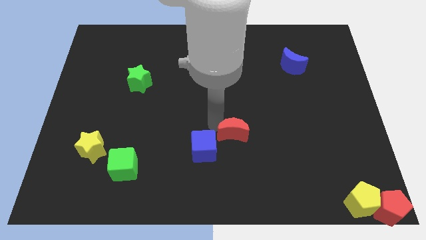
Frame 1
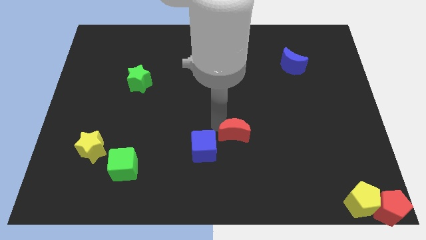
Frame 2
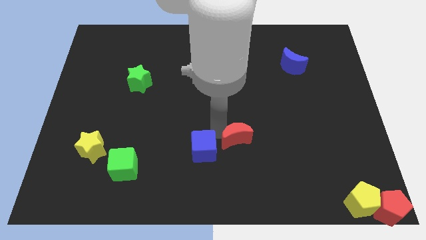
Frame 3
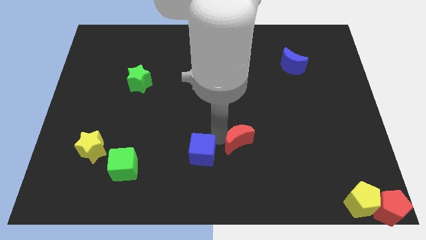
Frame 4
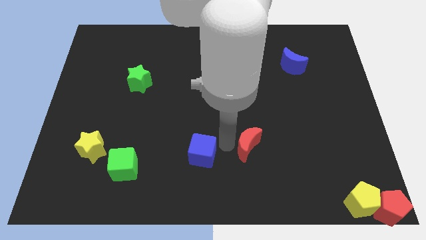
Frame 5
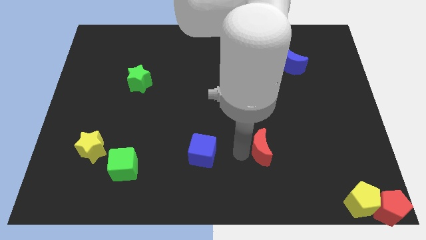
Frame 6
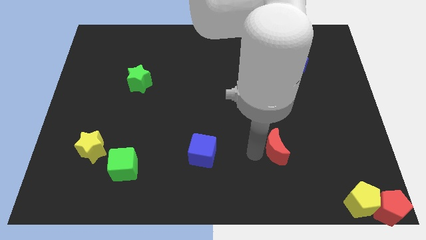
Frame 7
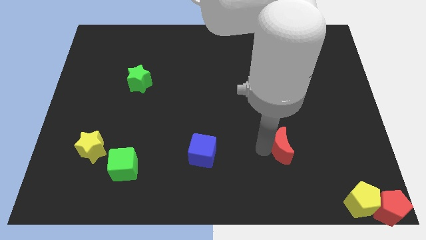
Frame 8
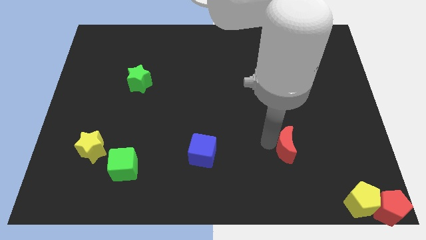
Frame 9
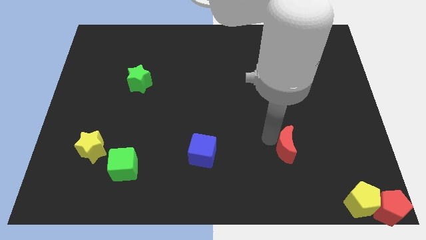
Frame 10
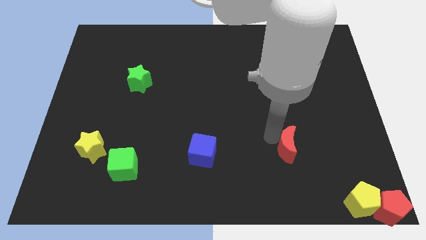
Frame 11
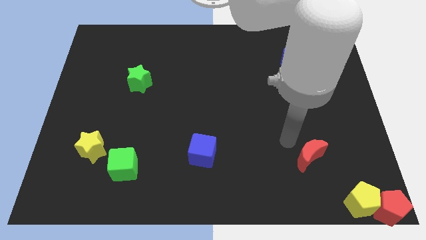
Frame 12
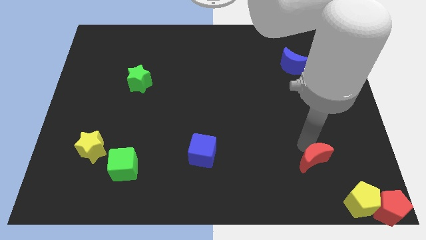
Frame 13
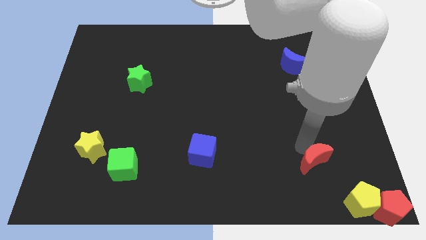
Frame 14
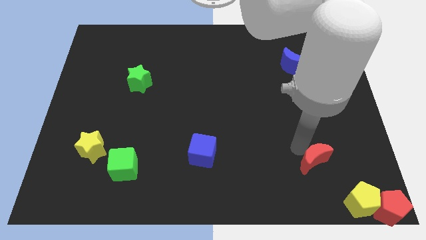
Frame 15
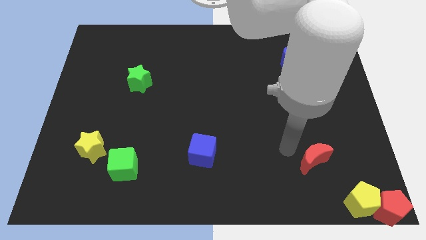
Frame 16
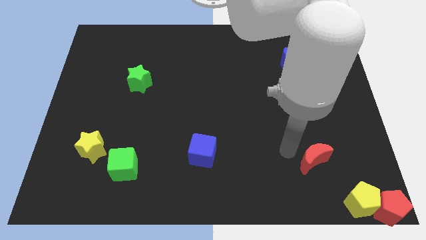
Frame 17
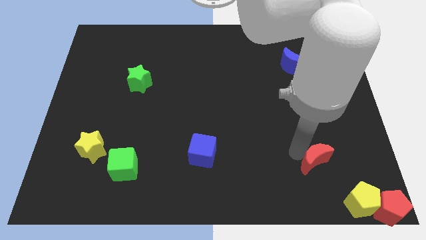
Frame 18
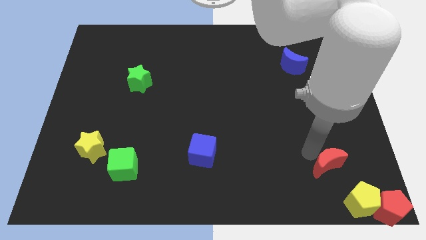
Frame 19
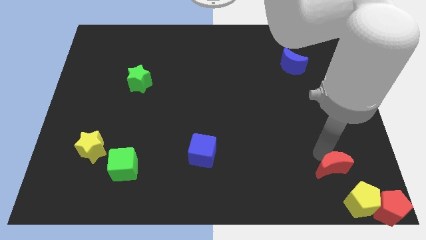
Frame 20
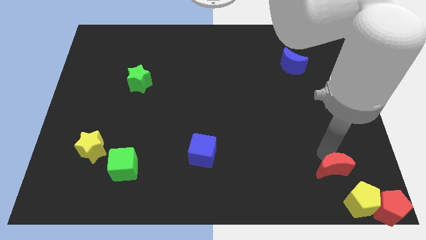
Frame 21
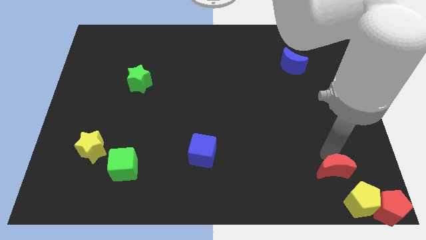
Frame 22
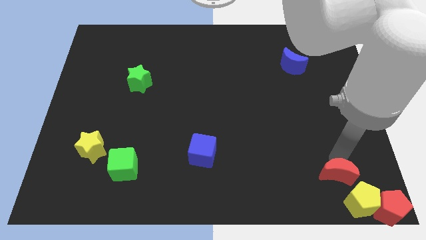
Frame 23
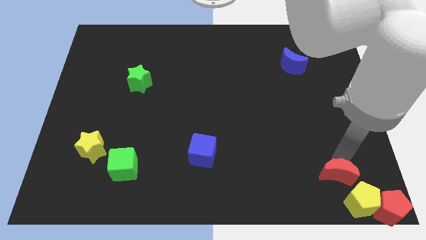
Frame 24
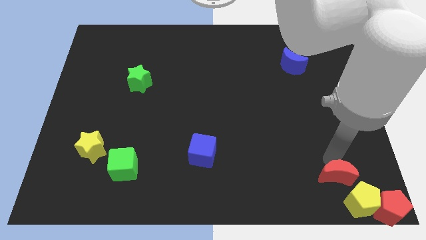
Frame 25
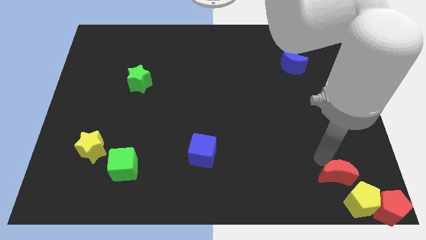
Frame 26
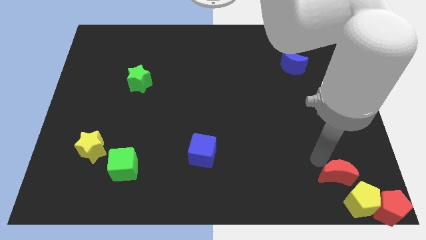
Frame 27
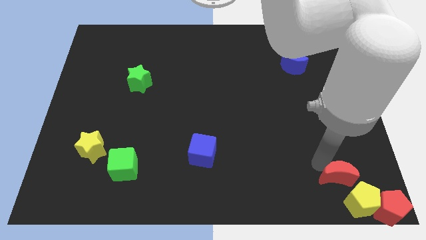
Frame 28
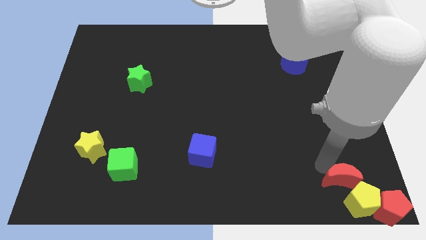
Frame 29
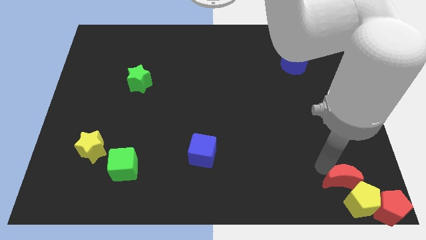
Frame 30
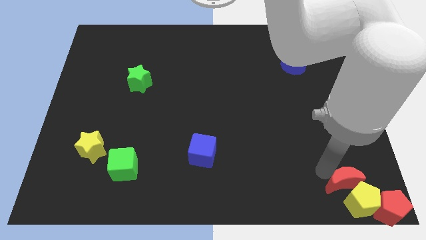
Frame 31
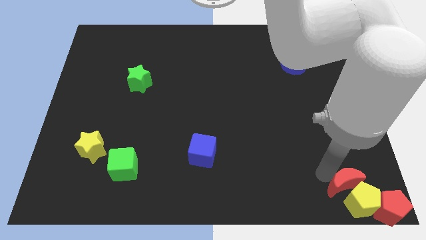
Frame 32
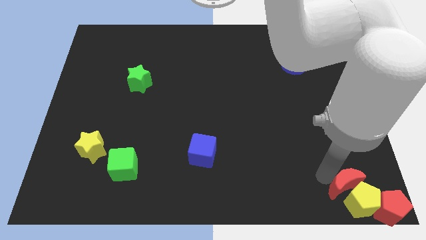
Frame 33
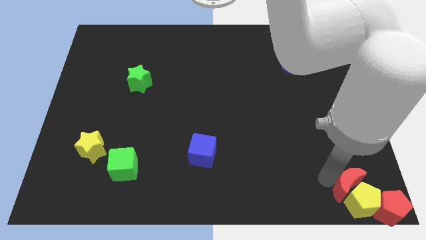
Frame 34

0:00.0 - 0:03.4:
move the red crescent into the the yellow pentagon

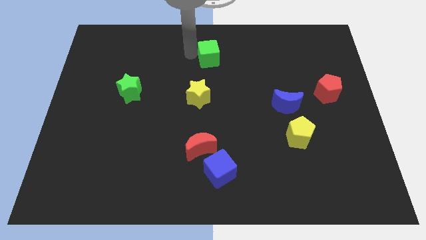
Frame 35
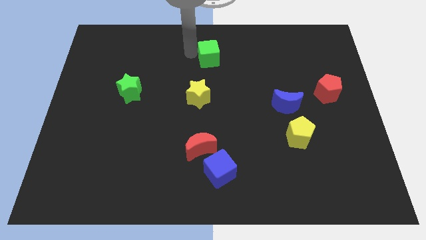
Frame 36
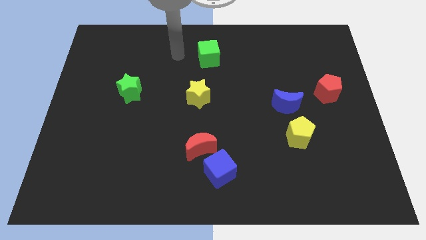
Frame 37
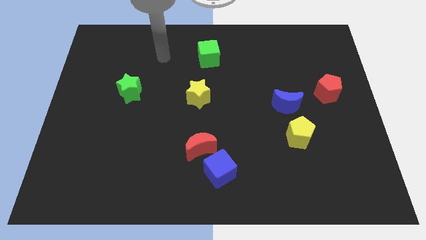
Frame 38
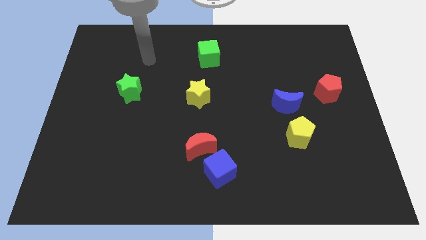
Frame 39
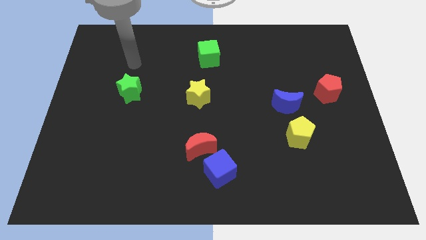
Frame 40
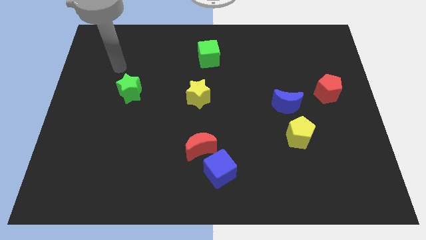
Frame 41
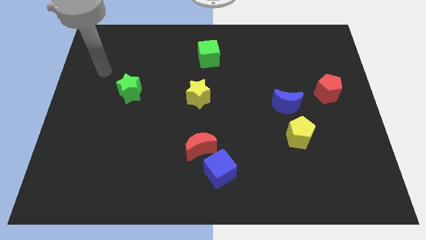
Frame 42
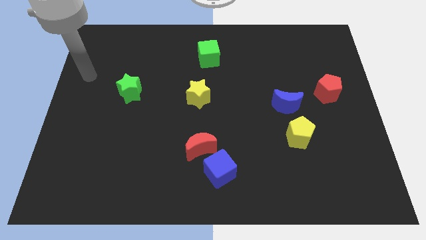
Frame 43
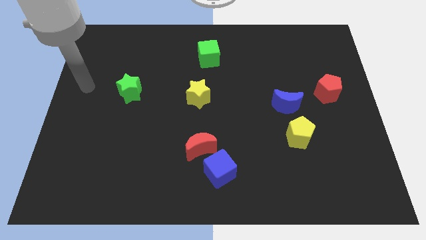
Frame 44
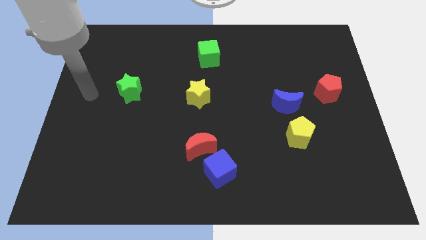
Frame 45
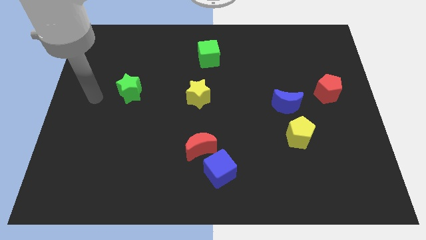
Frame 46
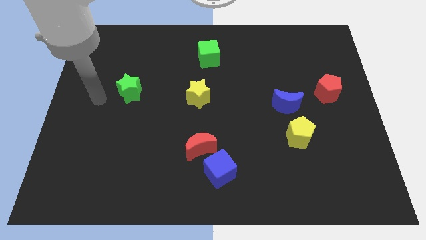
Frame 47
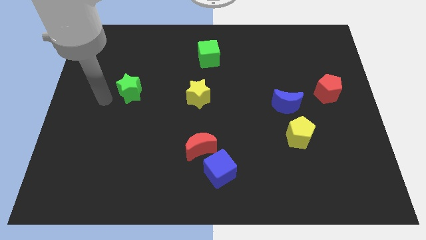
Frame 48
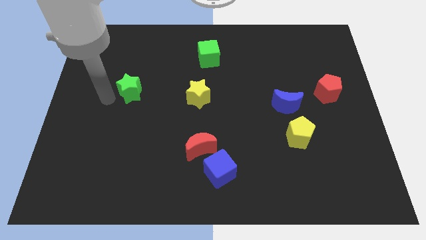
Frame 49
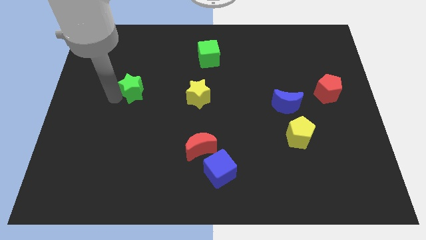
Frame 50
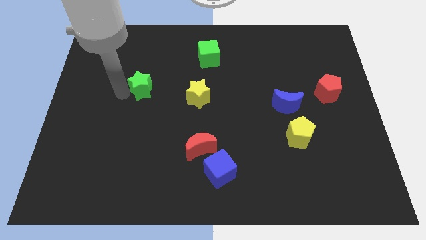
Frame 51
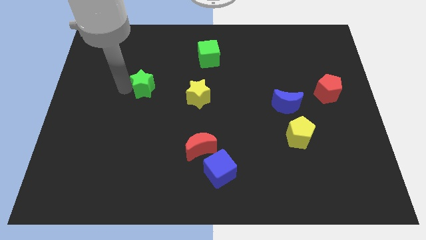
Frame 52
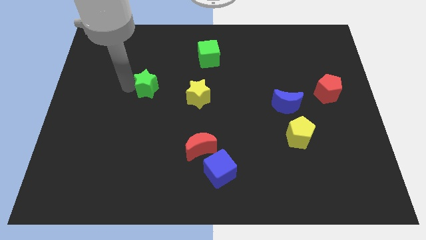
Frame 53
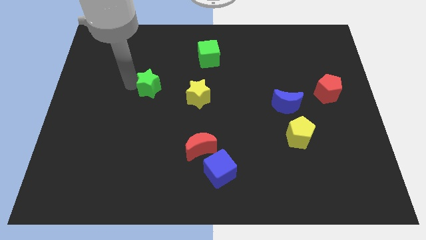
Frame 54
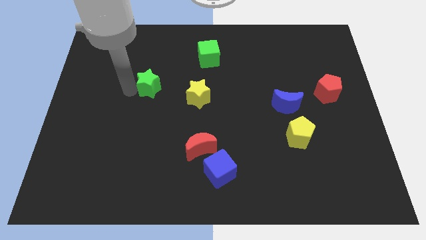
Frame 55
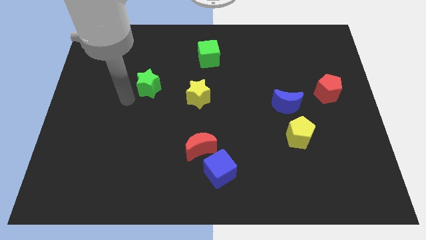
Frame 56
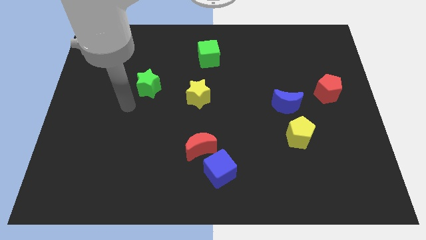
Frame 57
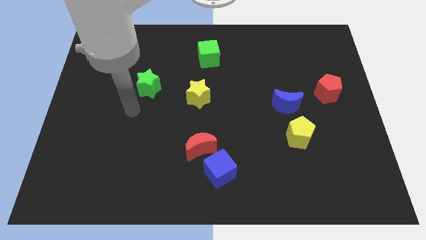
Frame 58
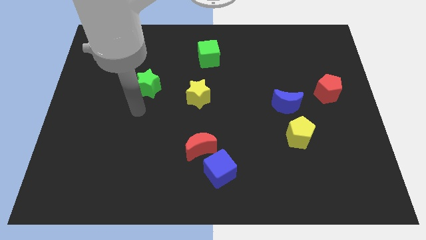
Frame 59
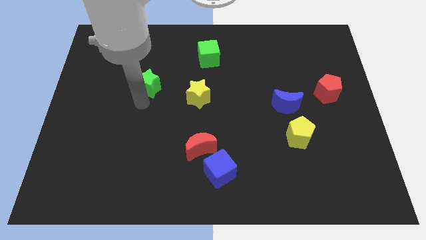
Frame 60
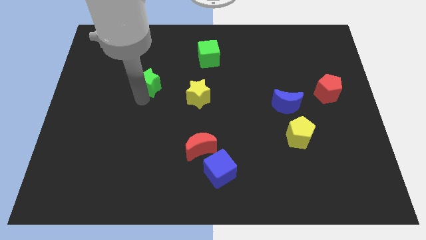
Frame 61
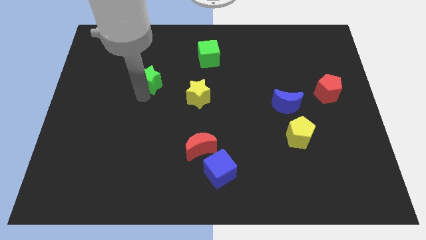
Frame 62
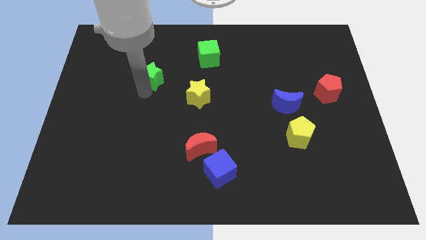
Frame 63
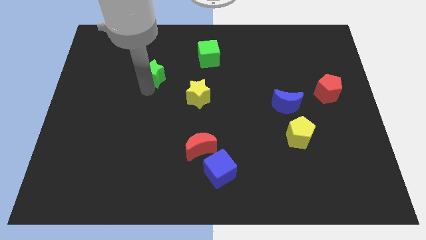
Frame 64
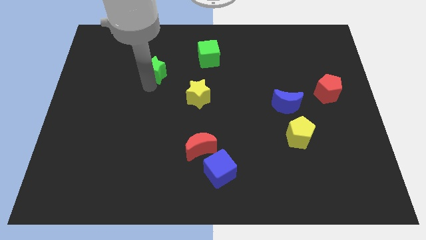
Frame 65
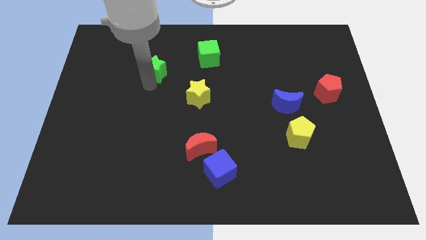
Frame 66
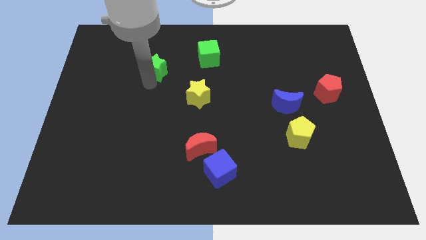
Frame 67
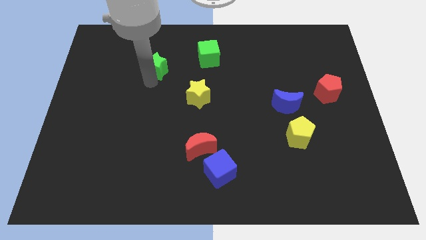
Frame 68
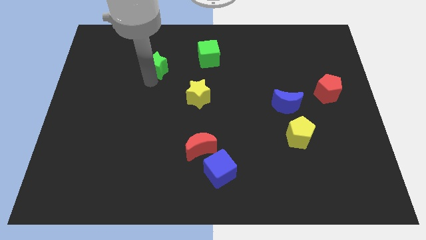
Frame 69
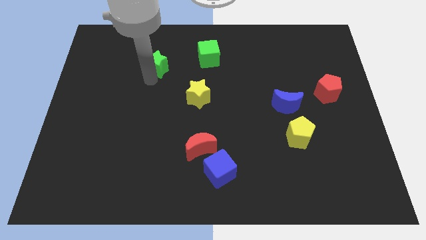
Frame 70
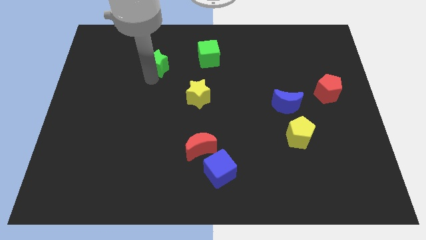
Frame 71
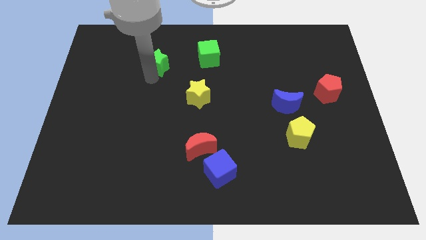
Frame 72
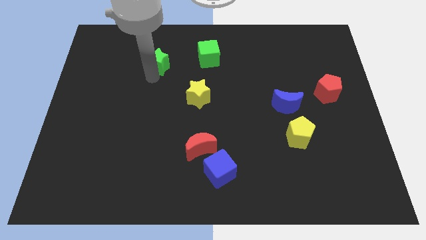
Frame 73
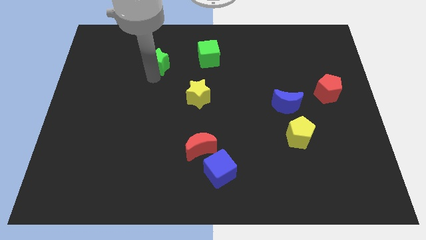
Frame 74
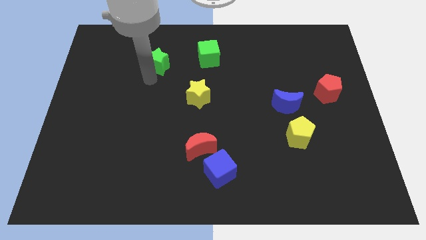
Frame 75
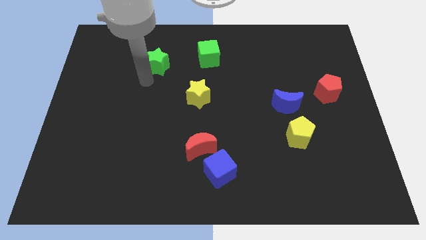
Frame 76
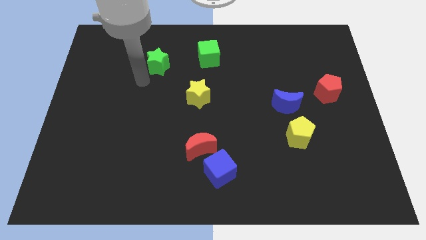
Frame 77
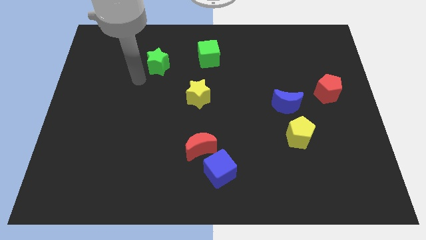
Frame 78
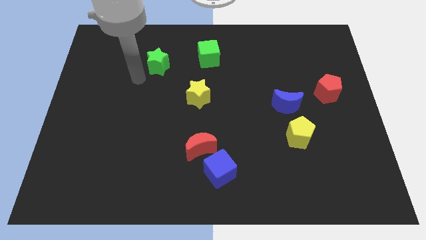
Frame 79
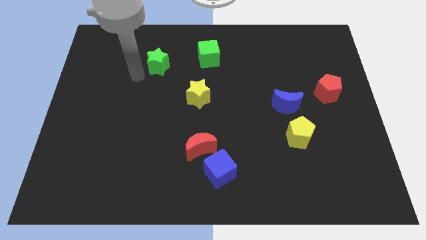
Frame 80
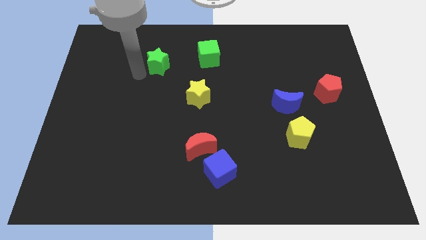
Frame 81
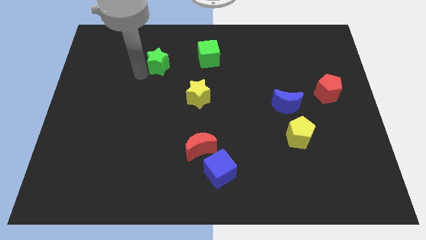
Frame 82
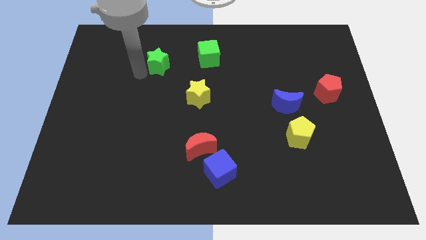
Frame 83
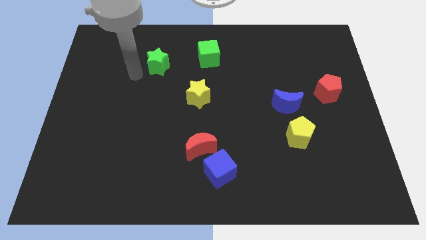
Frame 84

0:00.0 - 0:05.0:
move the green star to the left of the green cube

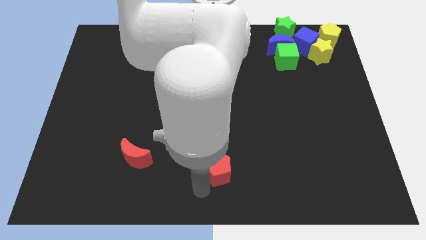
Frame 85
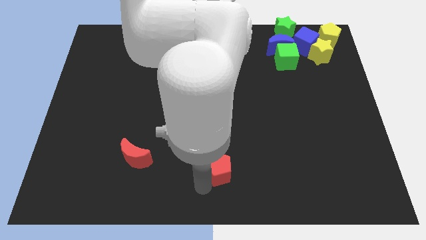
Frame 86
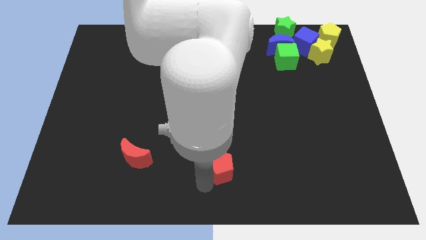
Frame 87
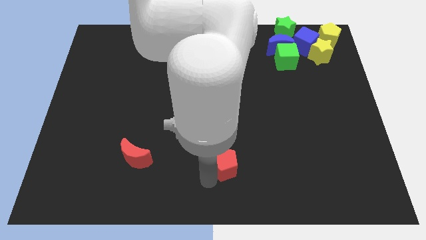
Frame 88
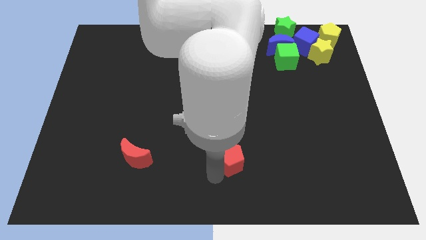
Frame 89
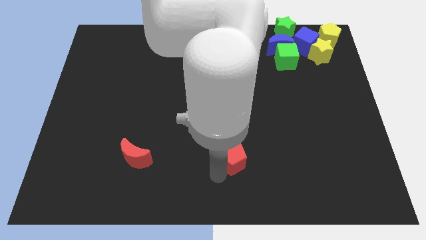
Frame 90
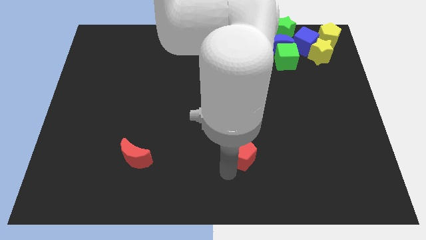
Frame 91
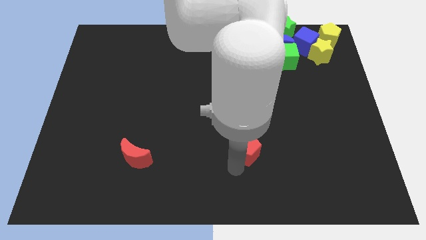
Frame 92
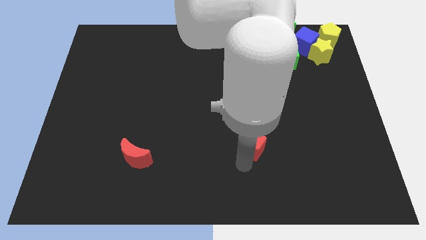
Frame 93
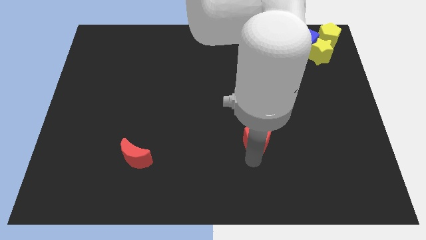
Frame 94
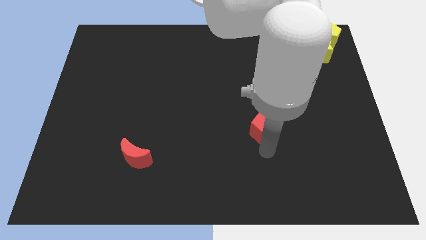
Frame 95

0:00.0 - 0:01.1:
move the red pentagon to the top of the board
